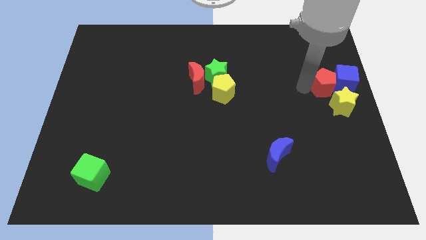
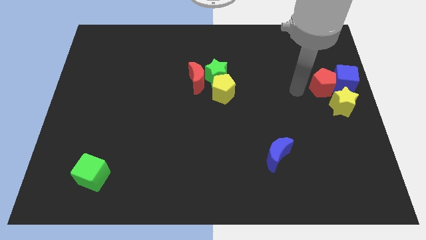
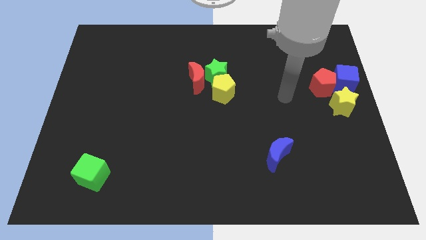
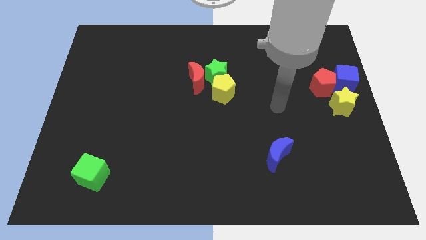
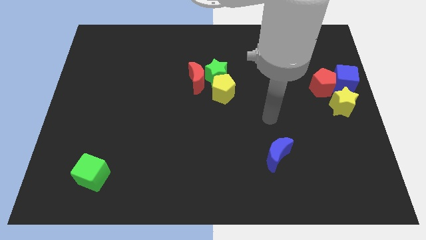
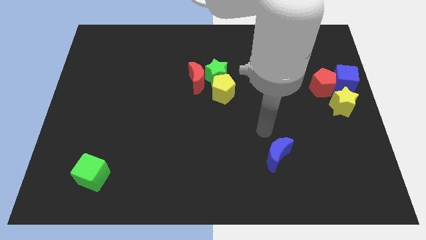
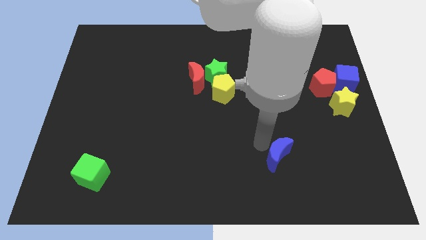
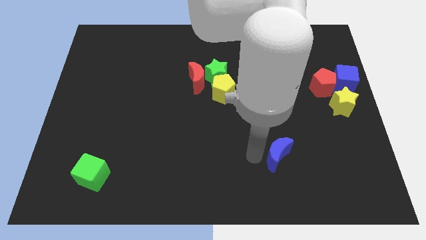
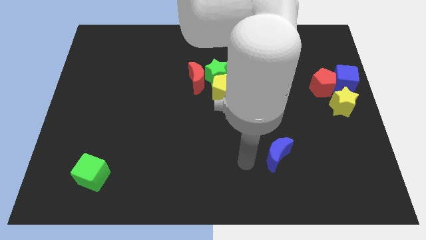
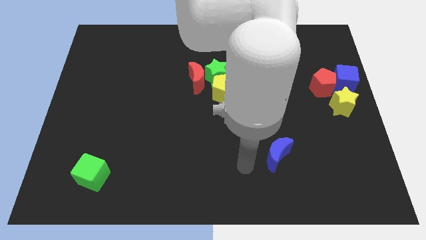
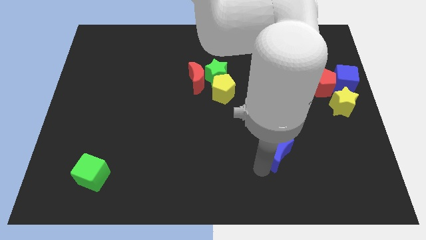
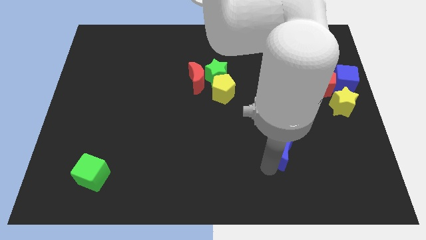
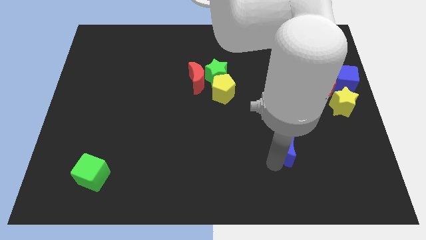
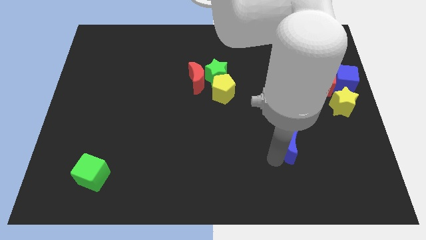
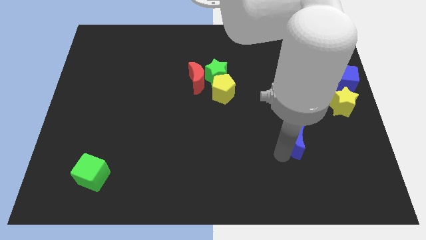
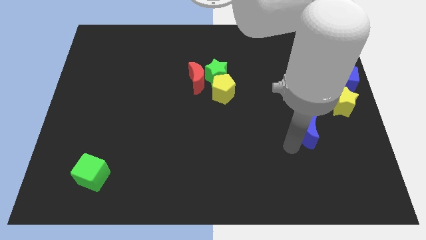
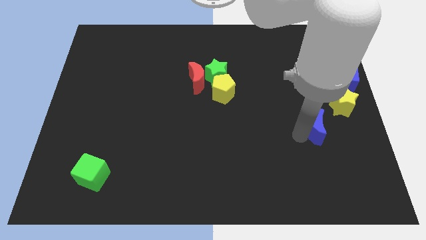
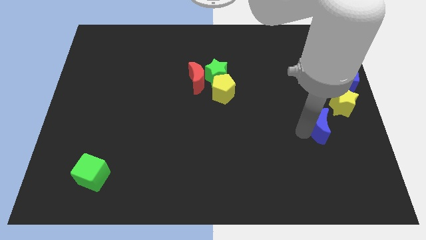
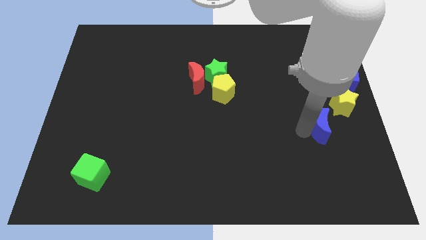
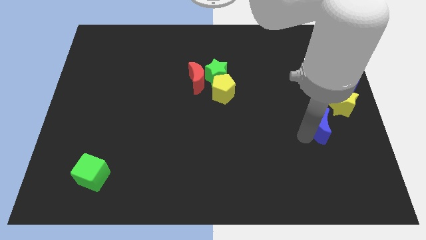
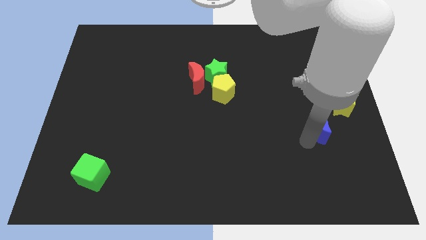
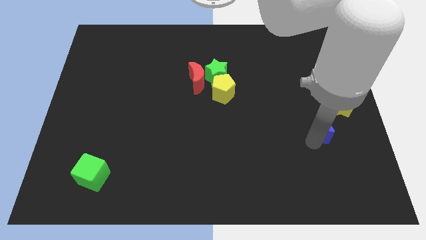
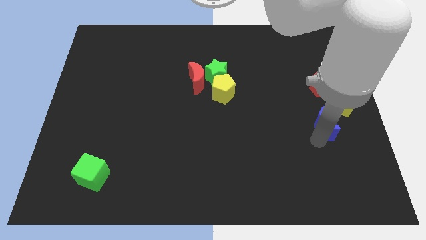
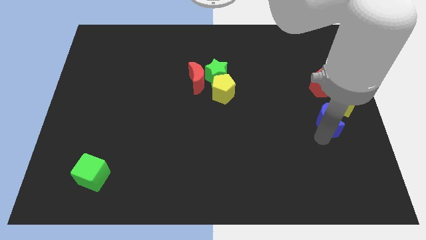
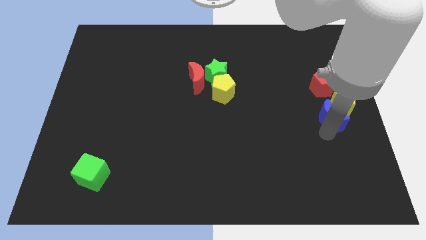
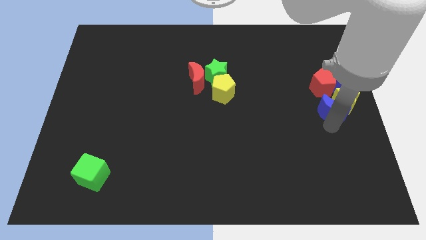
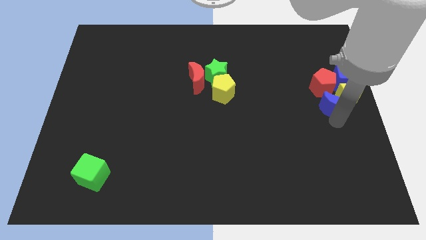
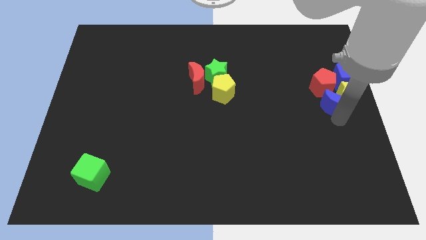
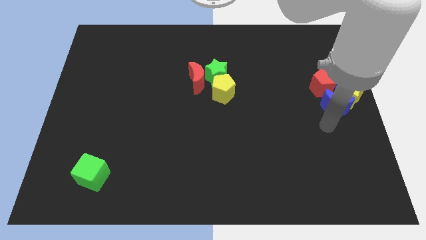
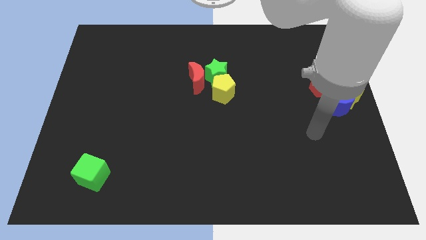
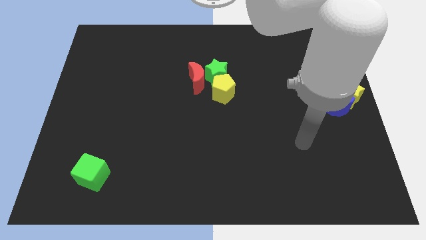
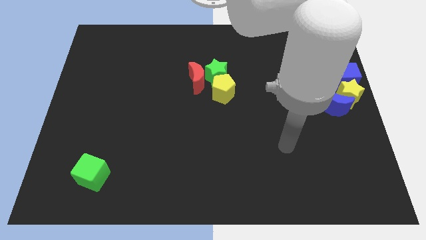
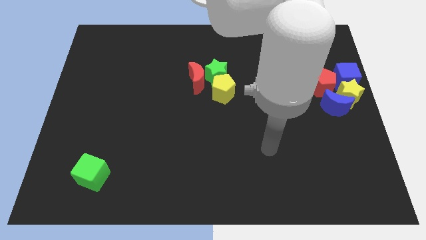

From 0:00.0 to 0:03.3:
push the blue crescent into the star

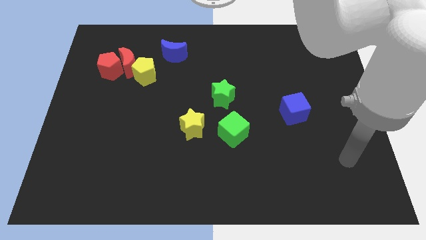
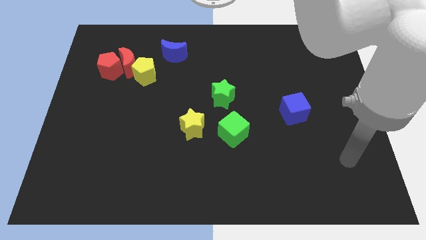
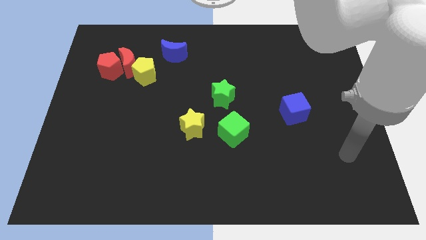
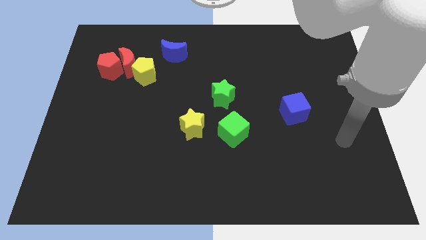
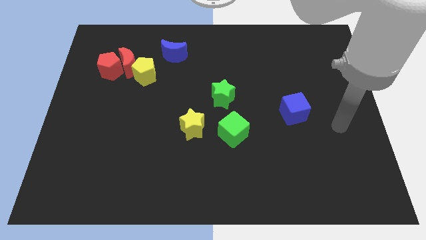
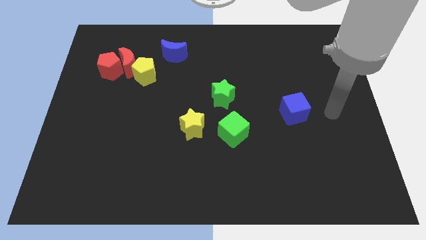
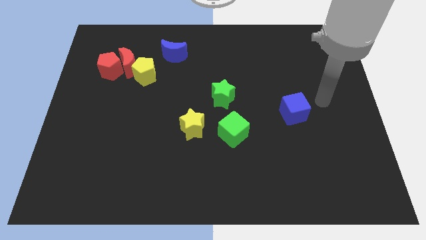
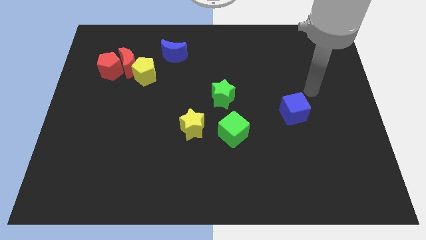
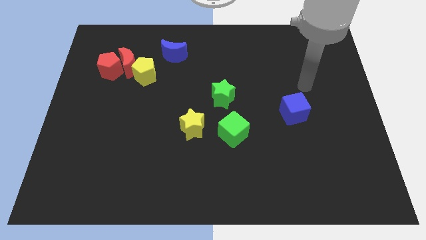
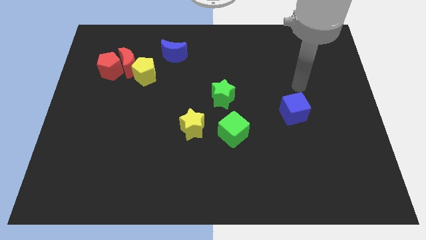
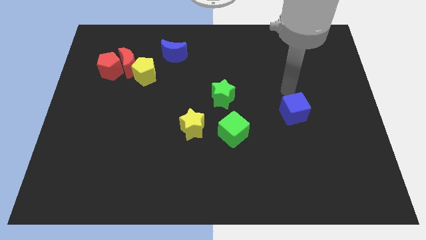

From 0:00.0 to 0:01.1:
move your arm to the top of the blue cube

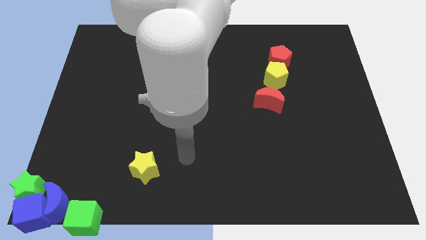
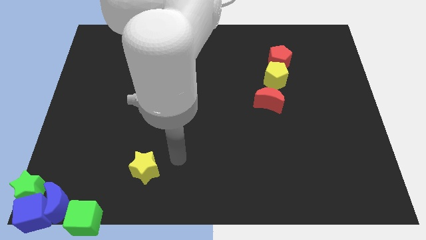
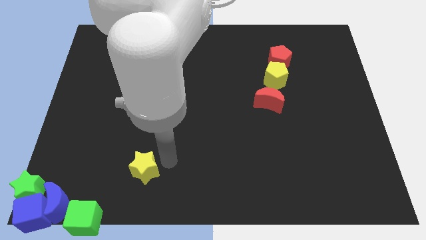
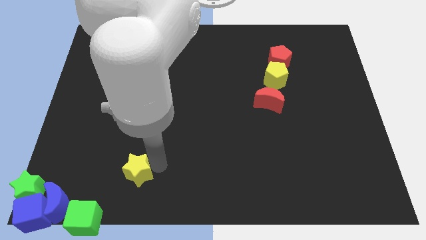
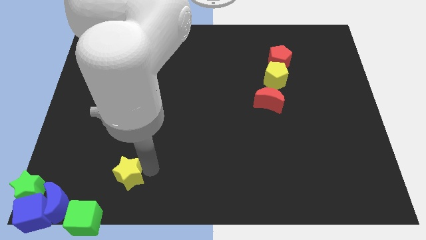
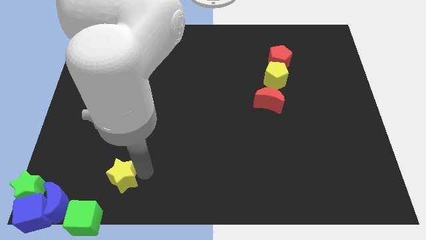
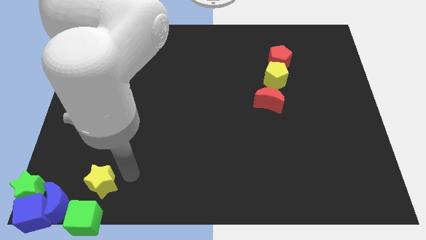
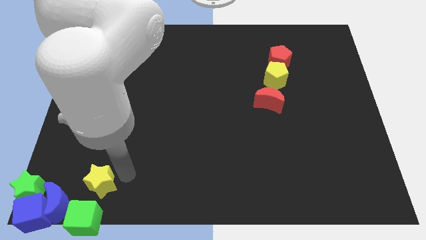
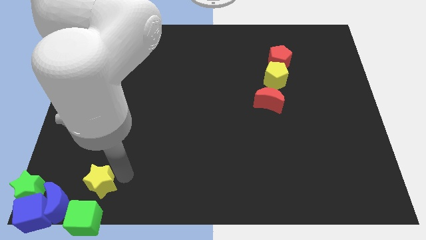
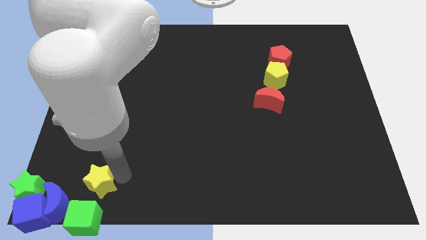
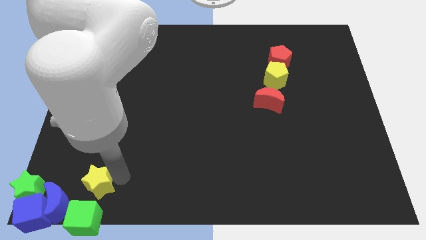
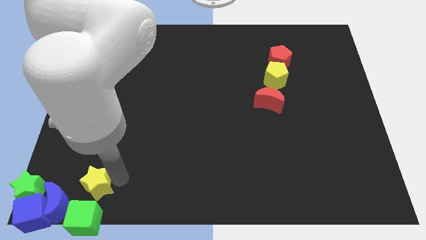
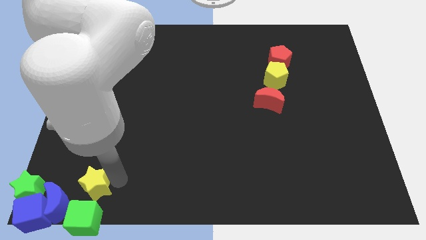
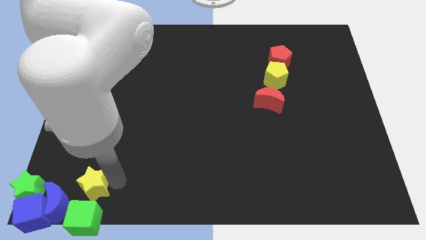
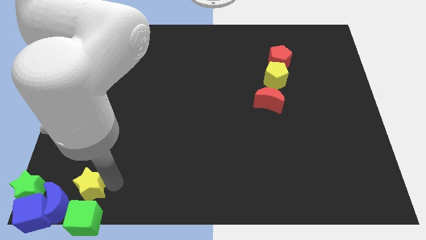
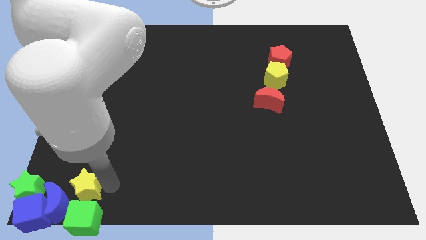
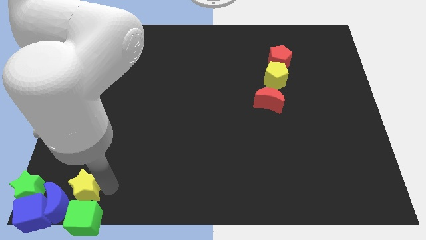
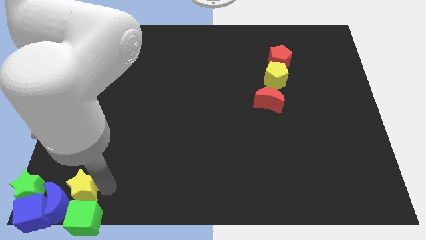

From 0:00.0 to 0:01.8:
place the yellow star at the top of the green cube

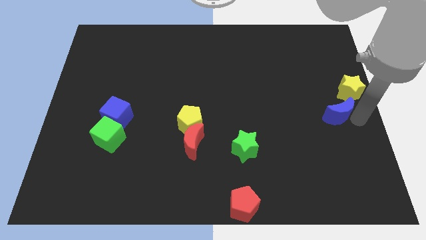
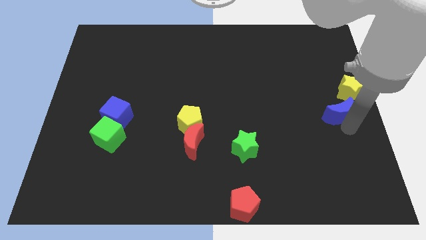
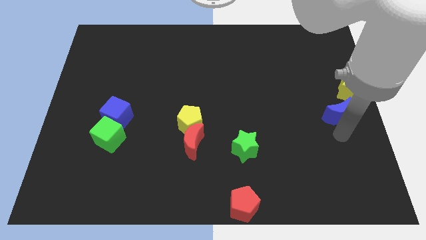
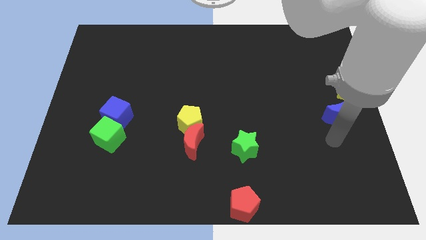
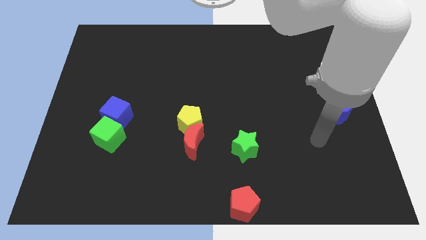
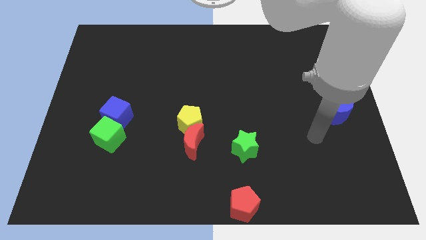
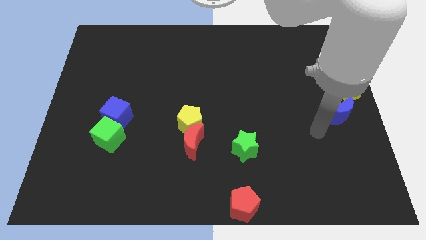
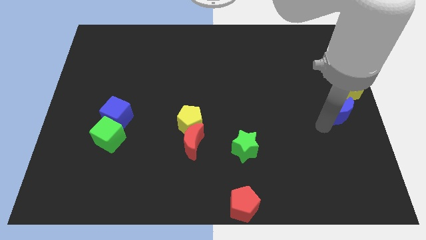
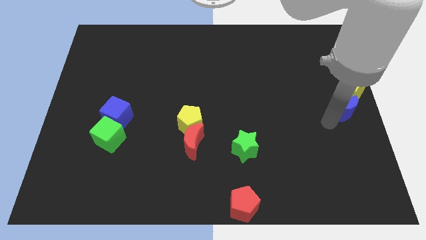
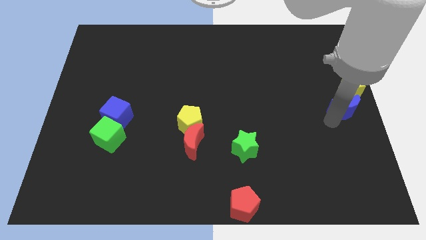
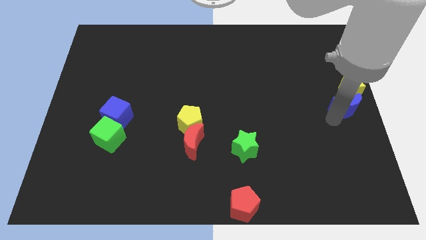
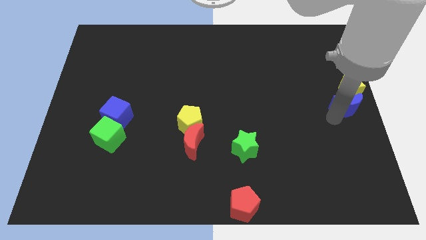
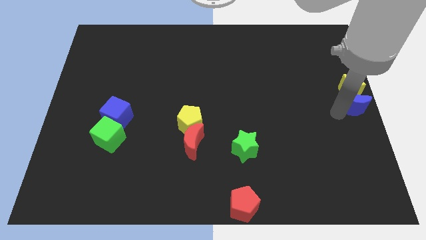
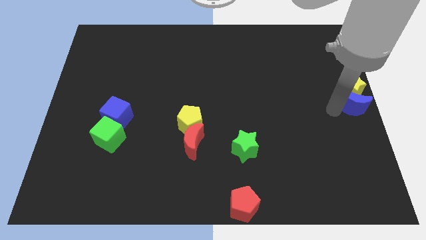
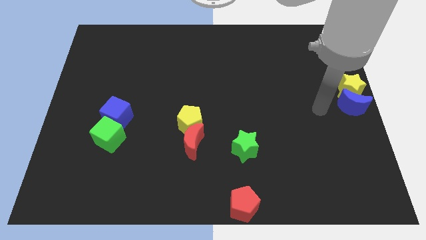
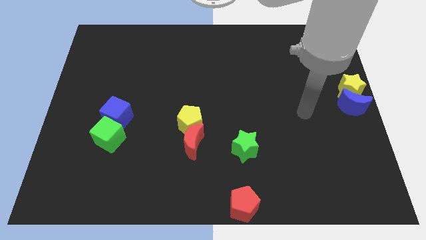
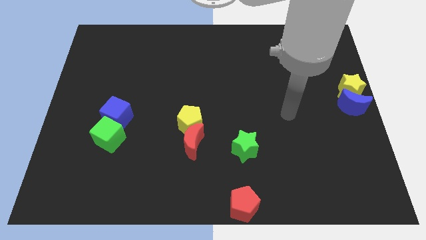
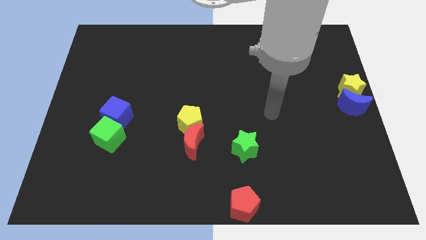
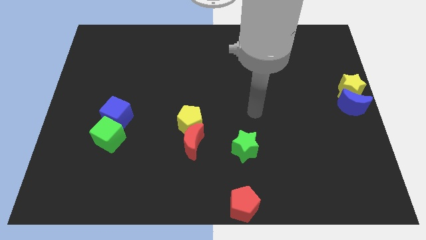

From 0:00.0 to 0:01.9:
push the blue crescent to the bottom of the yellow star

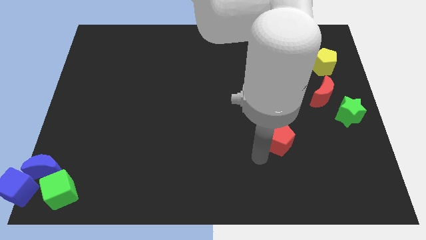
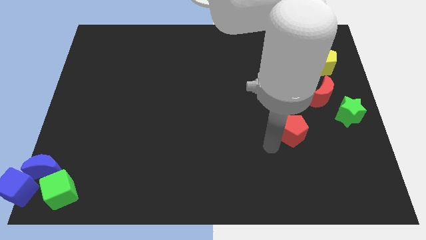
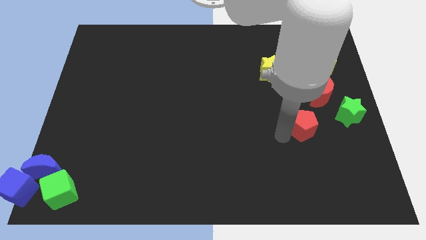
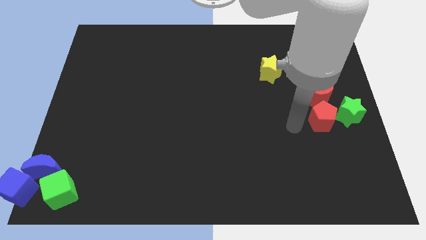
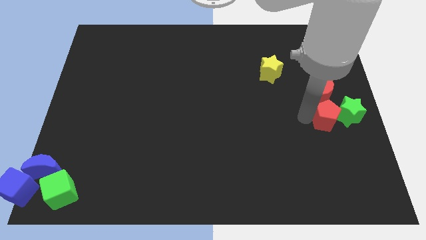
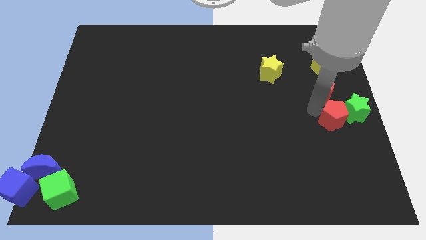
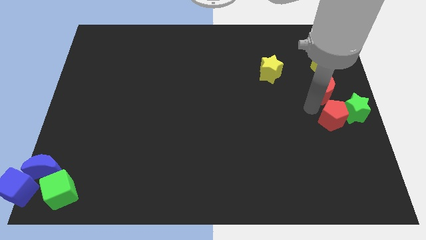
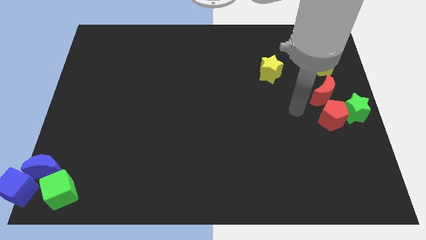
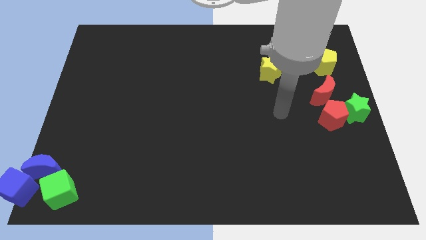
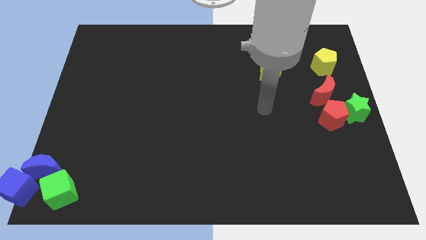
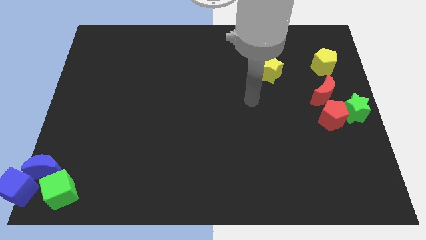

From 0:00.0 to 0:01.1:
move the red pentagon into the group of objects
